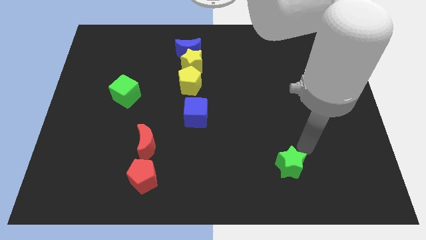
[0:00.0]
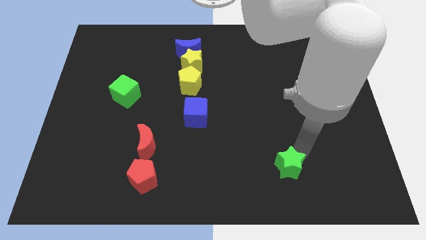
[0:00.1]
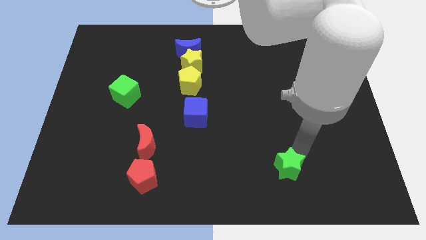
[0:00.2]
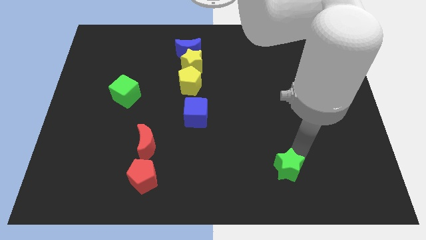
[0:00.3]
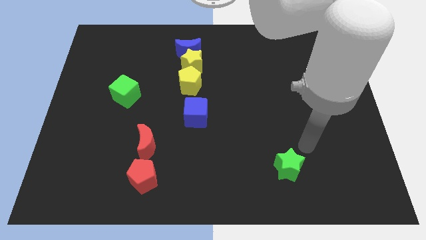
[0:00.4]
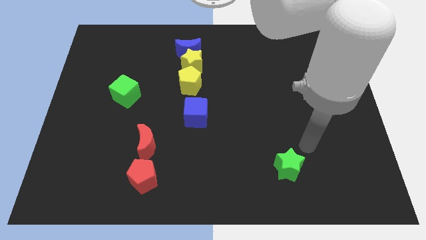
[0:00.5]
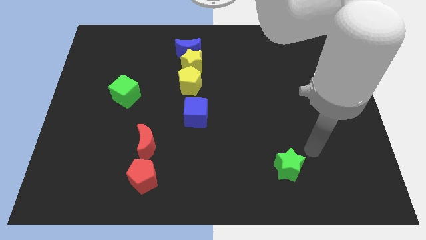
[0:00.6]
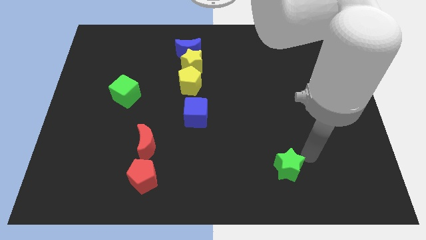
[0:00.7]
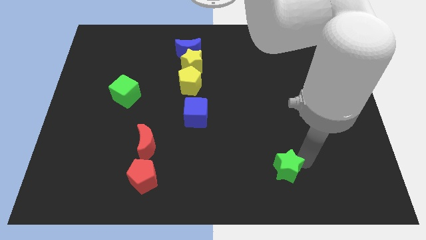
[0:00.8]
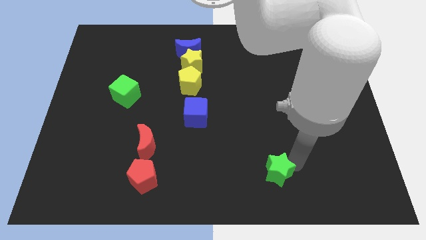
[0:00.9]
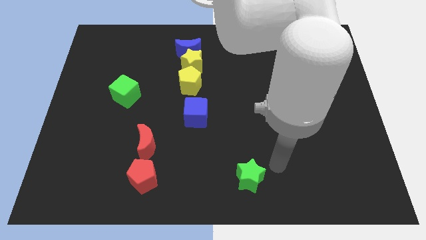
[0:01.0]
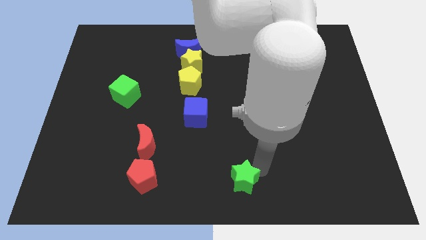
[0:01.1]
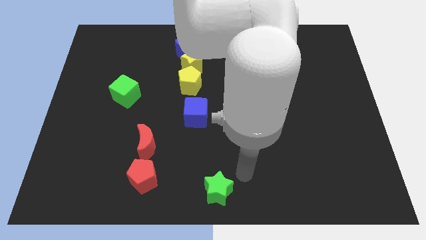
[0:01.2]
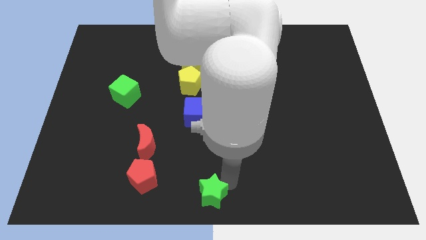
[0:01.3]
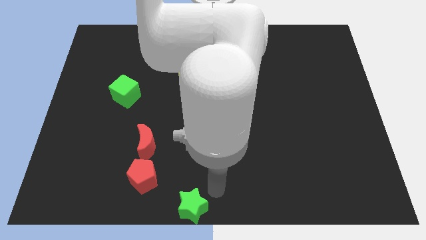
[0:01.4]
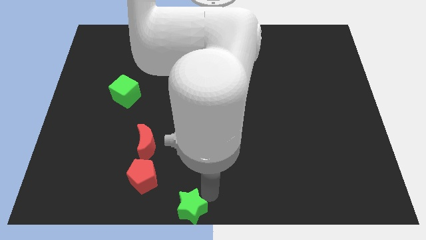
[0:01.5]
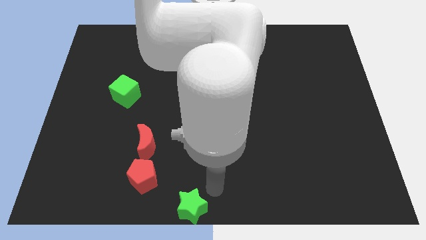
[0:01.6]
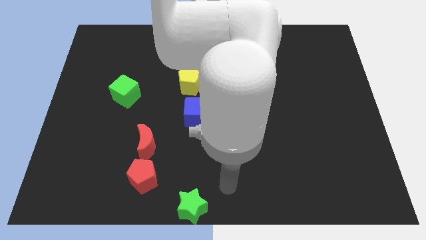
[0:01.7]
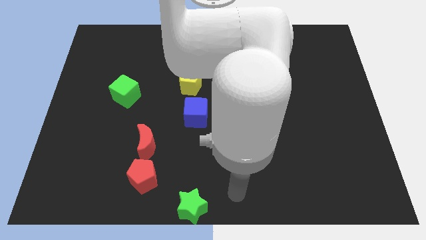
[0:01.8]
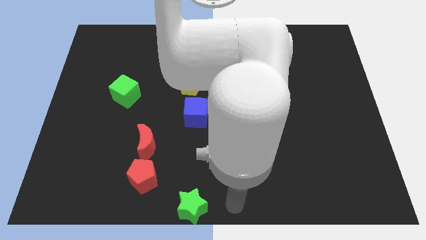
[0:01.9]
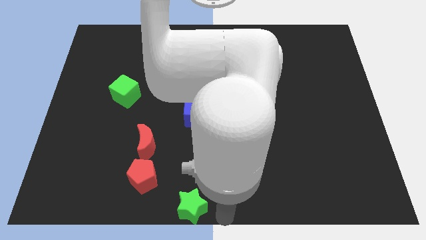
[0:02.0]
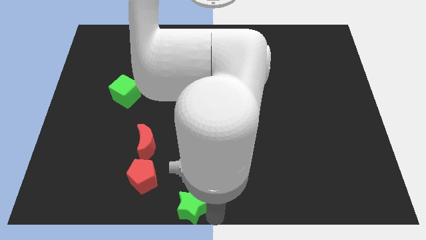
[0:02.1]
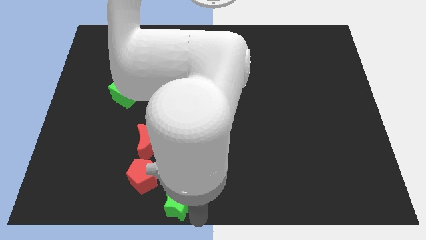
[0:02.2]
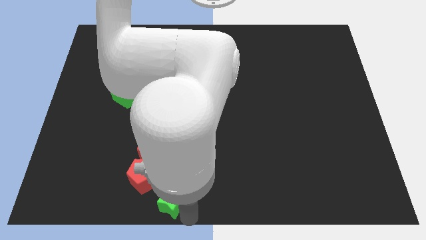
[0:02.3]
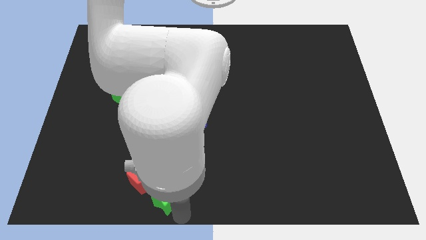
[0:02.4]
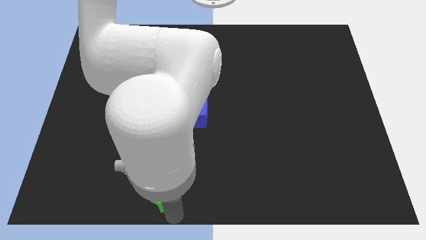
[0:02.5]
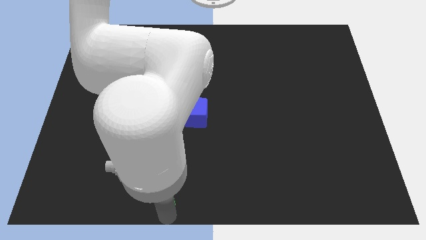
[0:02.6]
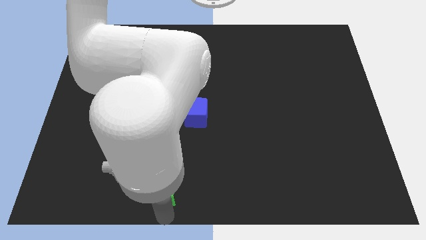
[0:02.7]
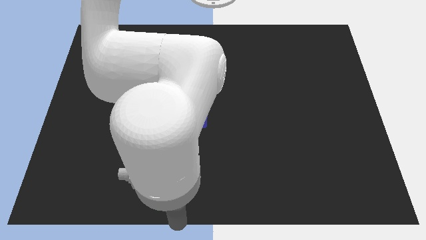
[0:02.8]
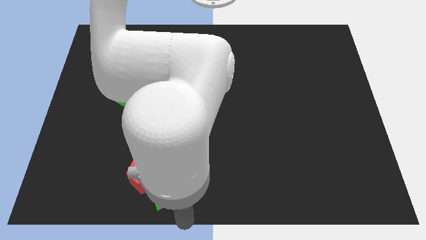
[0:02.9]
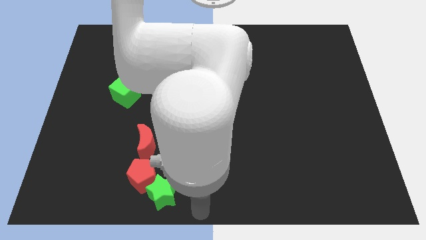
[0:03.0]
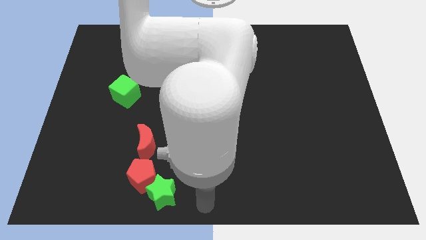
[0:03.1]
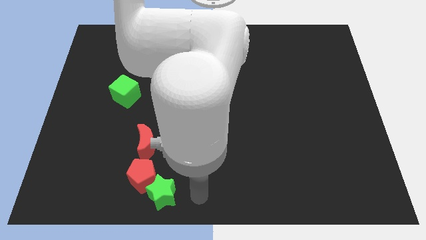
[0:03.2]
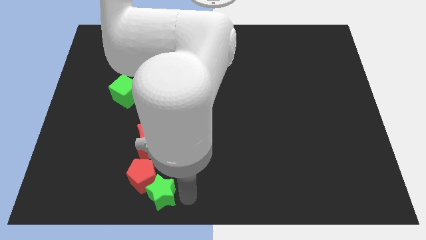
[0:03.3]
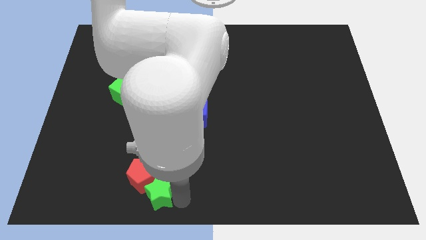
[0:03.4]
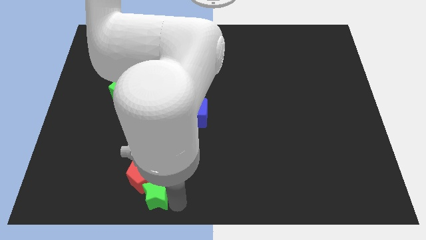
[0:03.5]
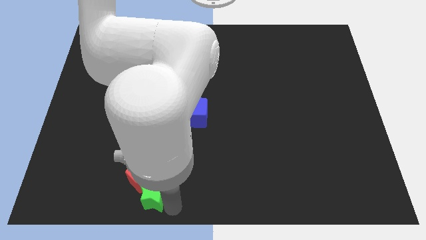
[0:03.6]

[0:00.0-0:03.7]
move the green star below the red pentagon

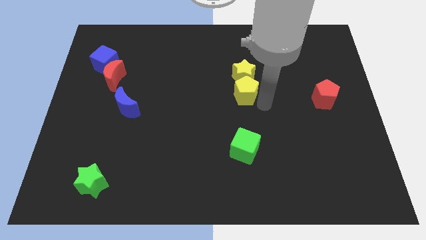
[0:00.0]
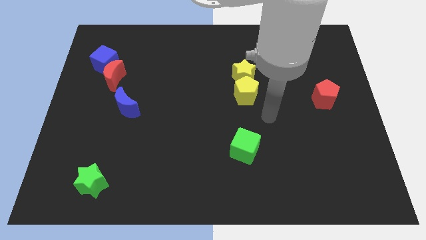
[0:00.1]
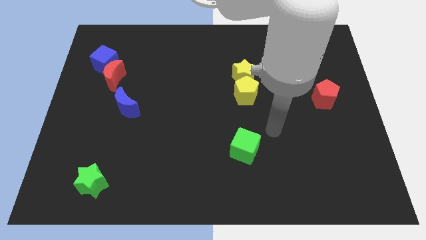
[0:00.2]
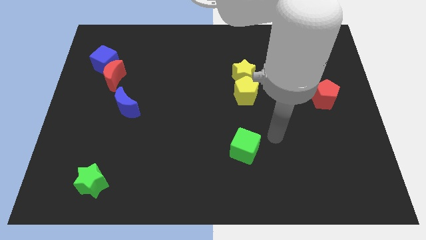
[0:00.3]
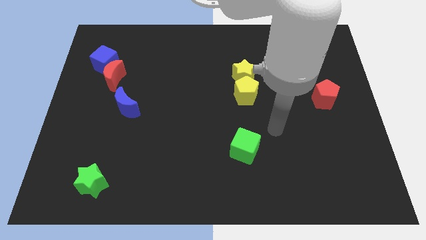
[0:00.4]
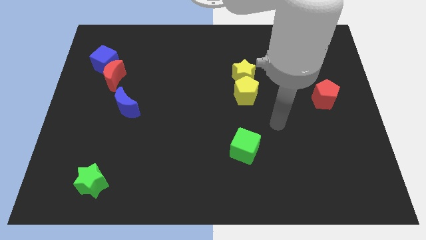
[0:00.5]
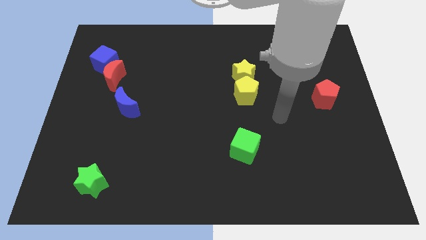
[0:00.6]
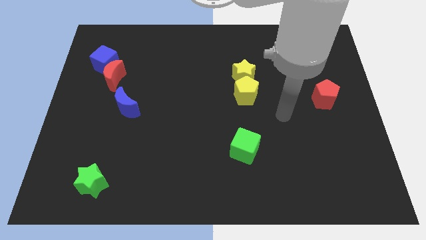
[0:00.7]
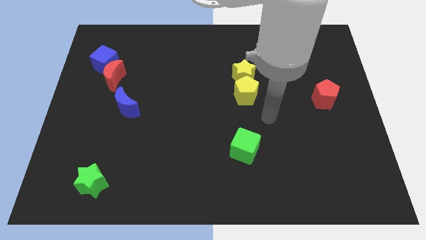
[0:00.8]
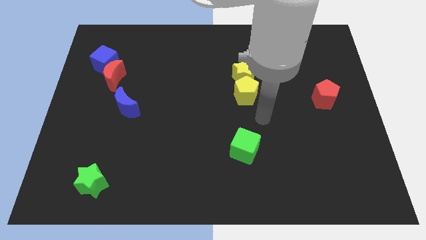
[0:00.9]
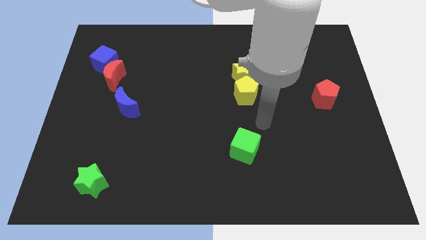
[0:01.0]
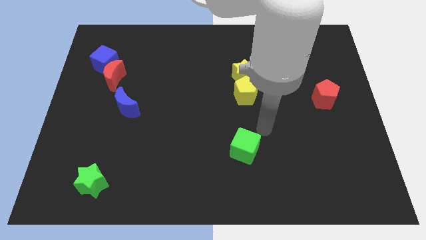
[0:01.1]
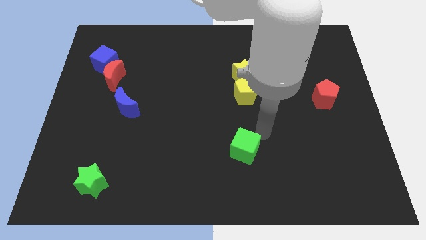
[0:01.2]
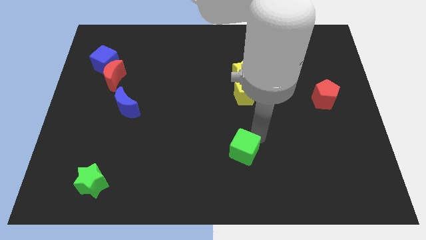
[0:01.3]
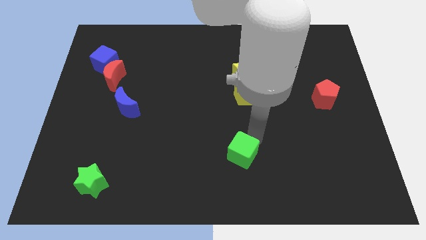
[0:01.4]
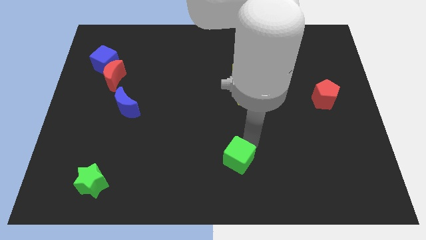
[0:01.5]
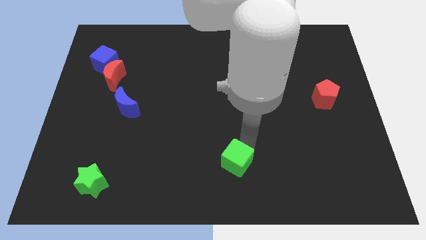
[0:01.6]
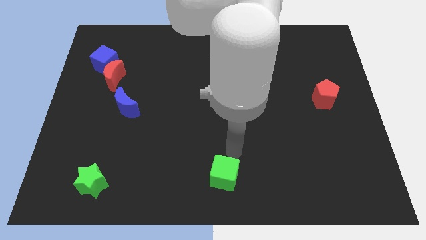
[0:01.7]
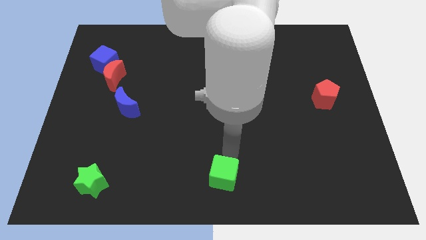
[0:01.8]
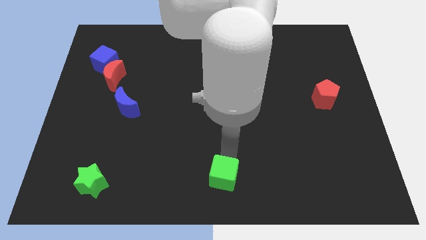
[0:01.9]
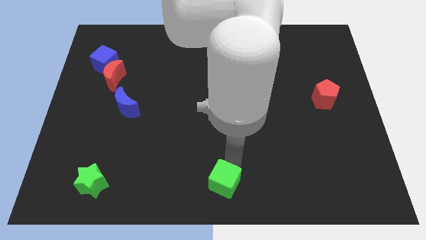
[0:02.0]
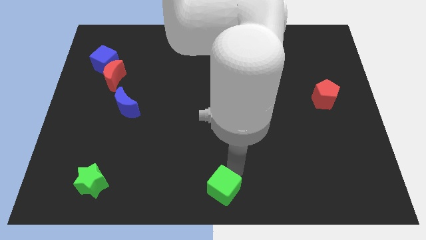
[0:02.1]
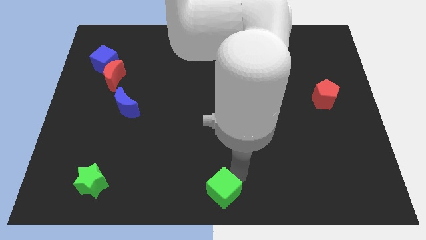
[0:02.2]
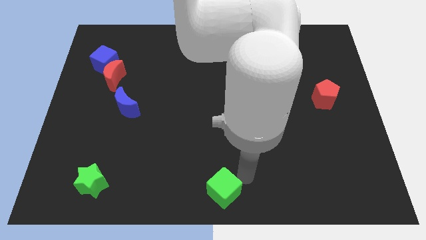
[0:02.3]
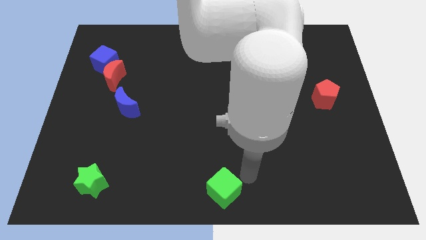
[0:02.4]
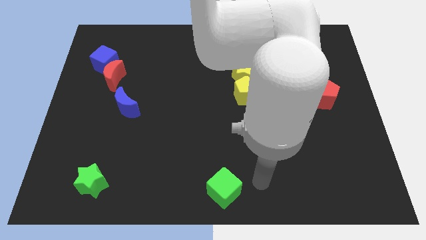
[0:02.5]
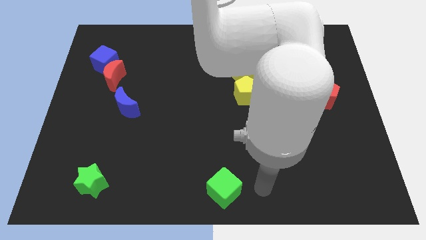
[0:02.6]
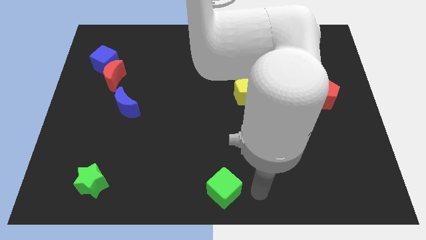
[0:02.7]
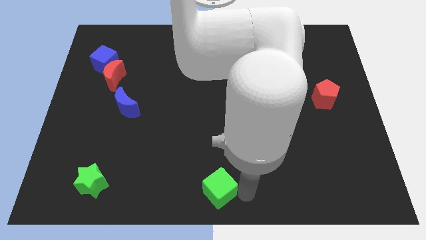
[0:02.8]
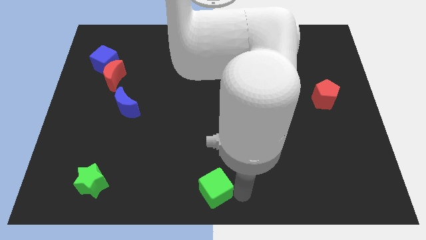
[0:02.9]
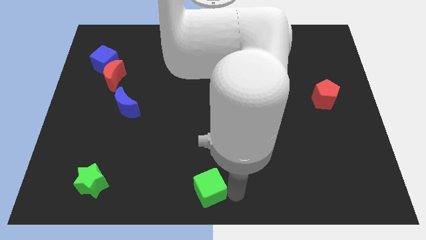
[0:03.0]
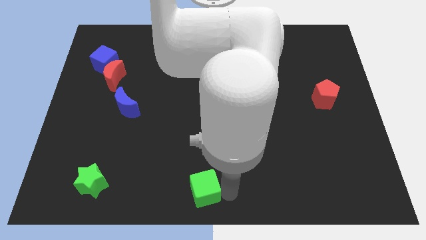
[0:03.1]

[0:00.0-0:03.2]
push the green cube towards the bottom center of the board

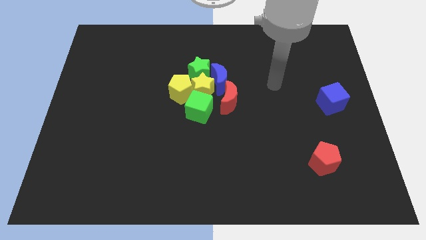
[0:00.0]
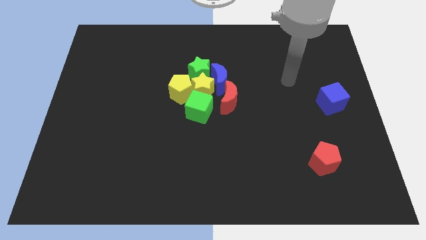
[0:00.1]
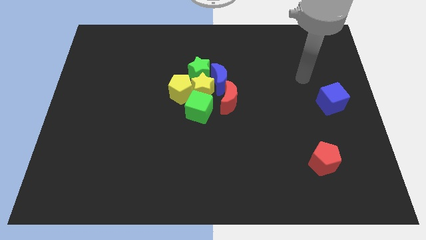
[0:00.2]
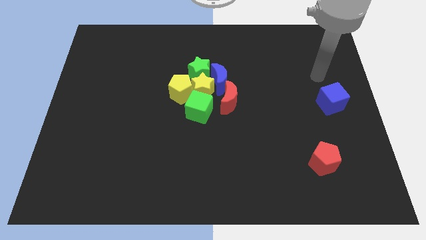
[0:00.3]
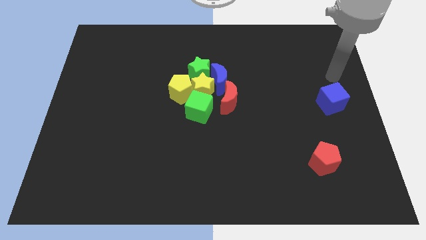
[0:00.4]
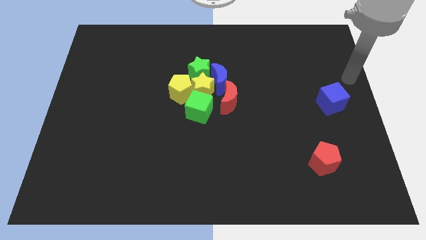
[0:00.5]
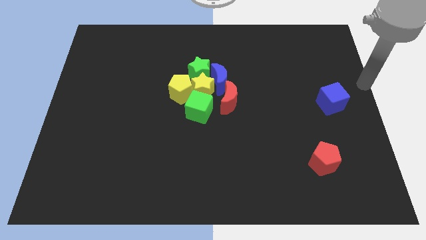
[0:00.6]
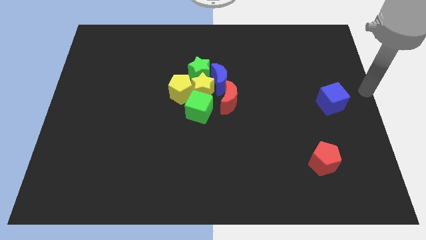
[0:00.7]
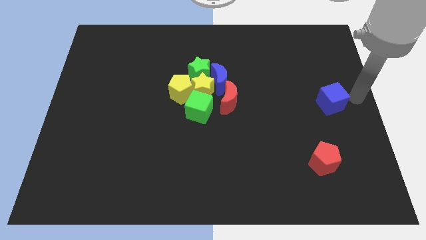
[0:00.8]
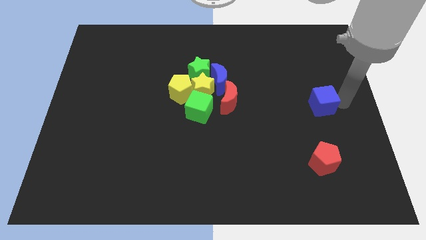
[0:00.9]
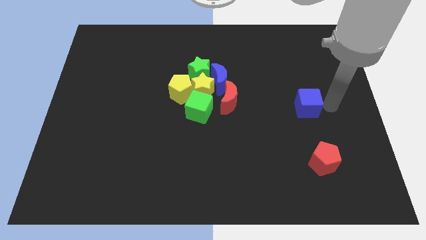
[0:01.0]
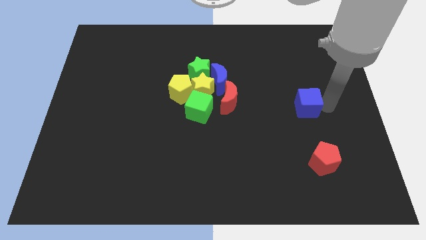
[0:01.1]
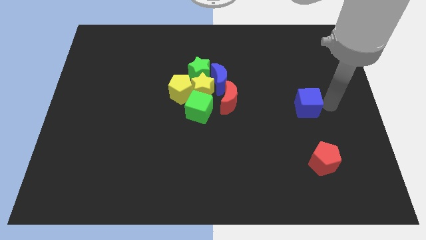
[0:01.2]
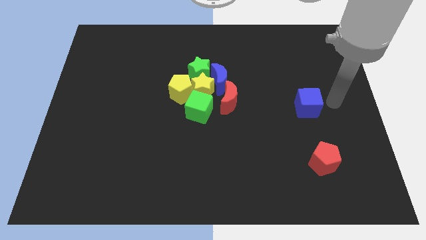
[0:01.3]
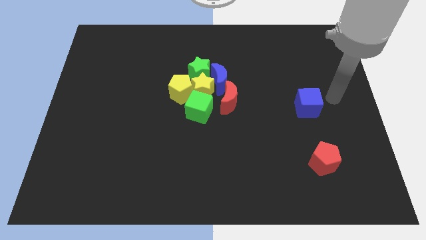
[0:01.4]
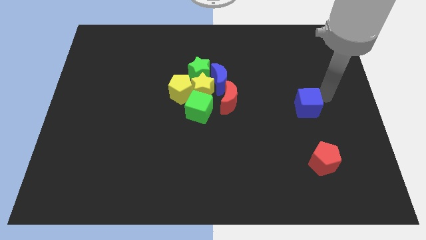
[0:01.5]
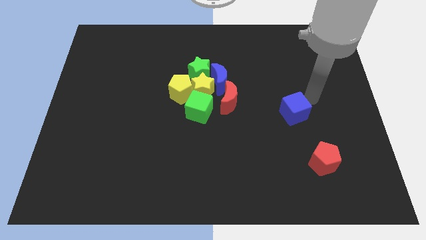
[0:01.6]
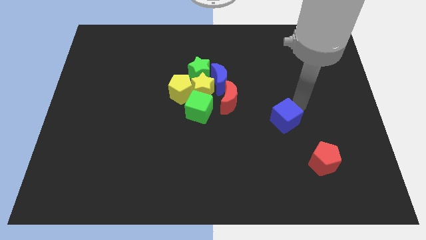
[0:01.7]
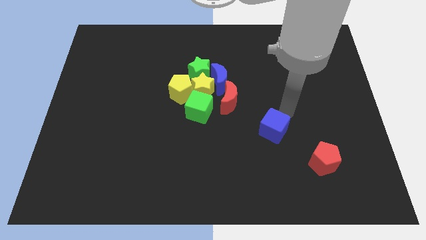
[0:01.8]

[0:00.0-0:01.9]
move the blue cube in between the red moon and red pentagon

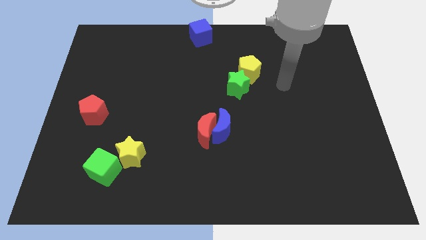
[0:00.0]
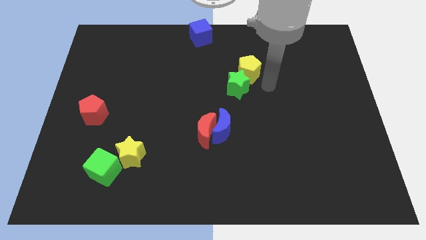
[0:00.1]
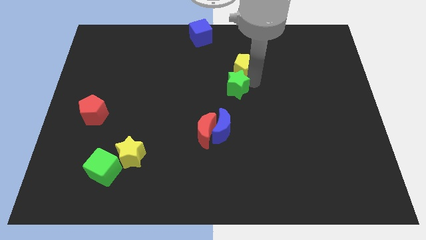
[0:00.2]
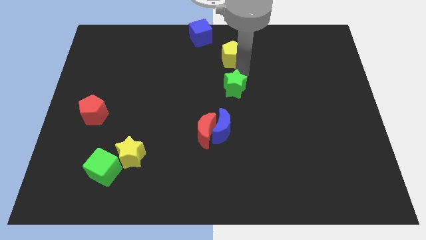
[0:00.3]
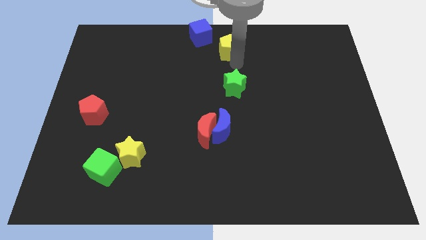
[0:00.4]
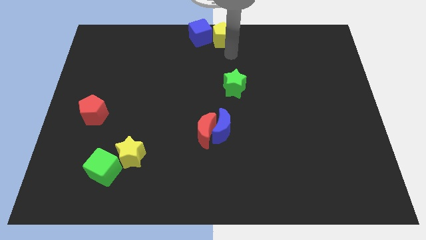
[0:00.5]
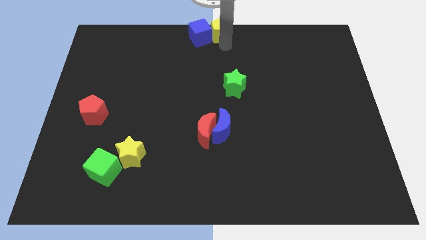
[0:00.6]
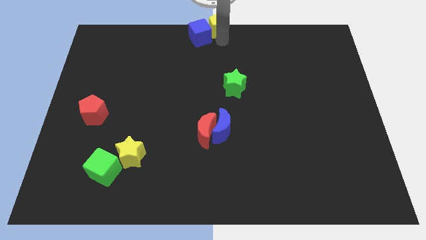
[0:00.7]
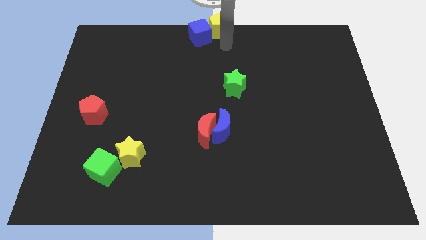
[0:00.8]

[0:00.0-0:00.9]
place yellow pentagon to the right of blue cube
